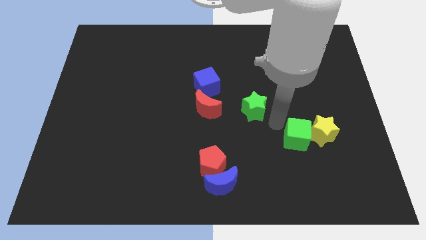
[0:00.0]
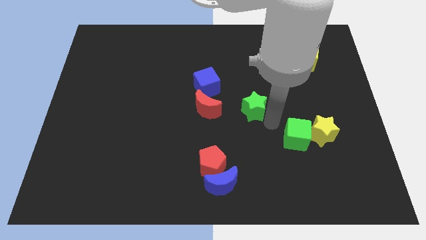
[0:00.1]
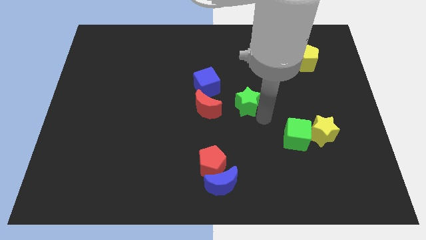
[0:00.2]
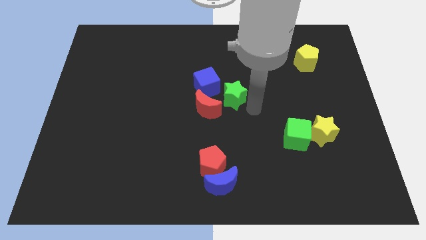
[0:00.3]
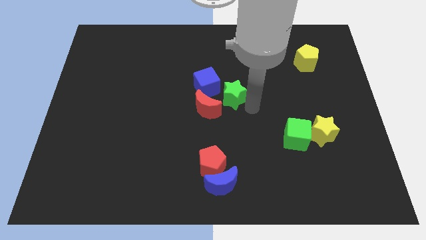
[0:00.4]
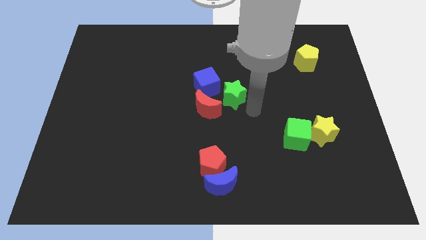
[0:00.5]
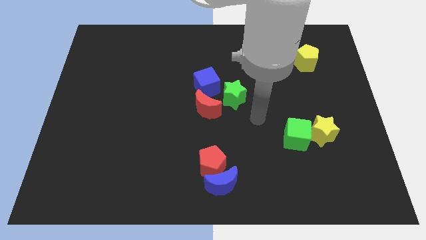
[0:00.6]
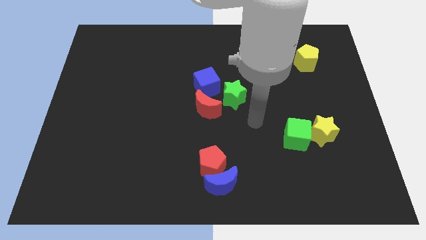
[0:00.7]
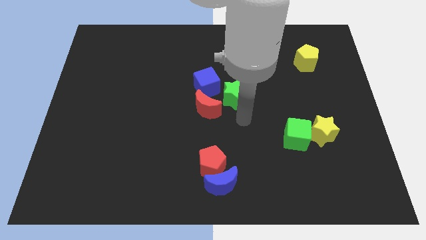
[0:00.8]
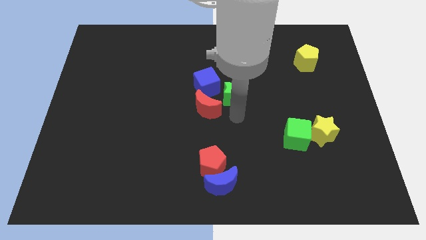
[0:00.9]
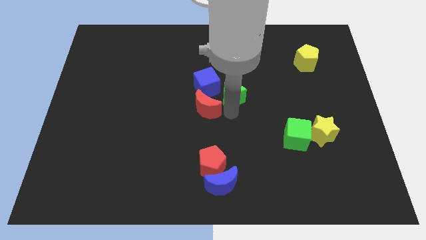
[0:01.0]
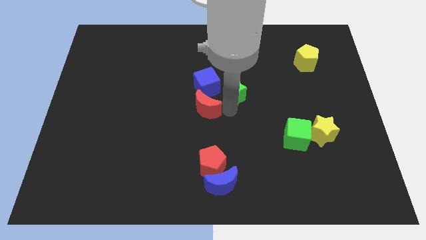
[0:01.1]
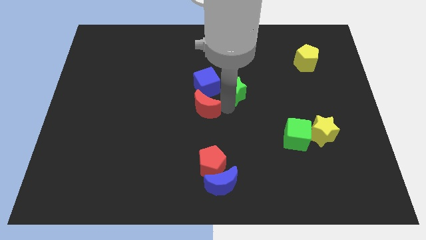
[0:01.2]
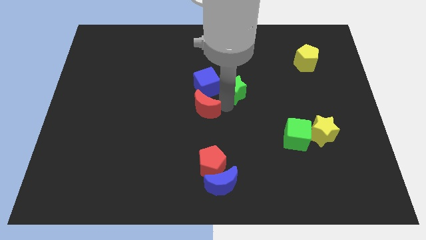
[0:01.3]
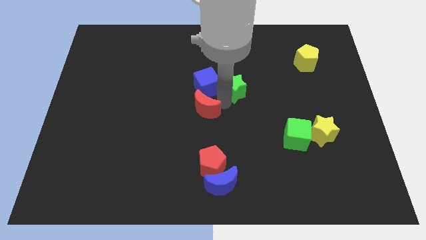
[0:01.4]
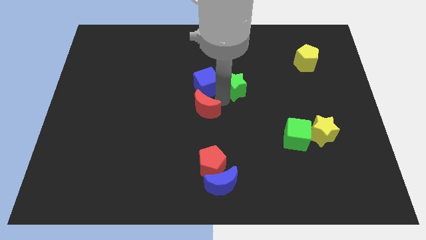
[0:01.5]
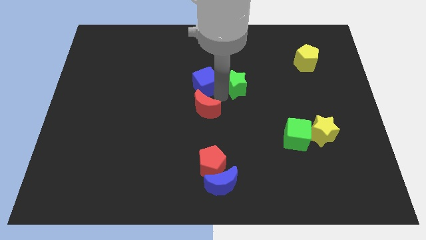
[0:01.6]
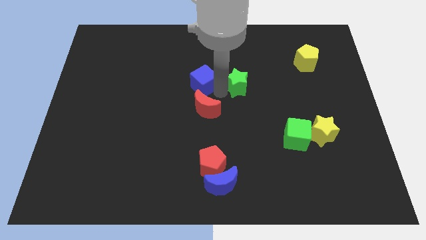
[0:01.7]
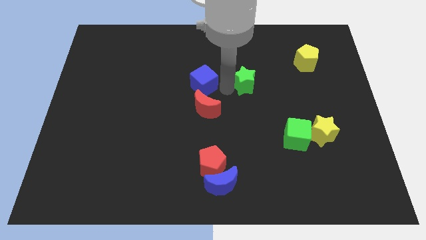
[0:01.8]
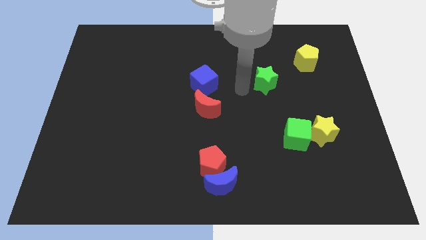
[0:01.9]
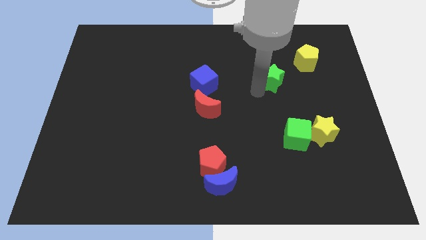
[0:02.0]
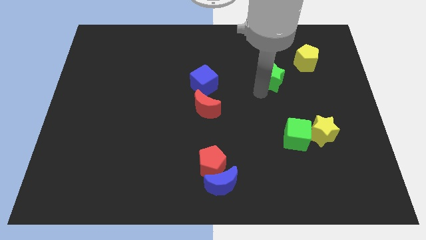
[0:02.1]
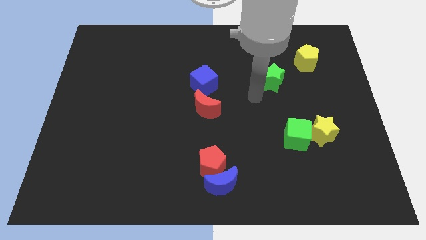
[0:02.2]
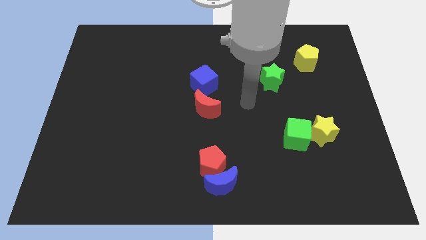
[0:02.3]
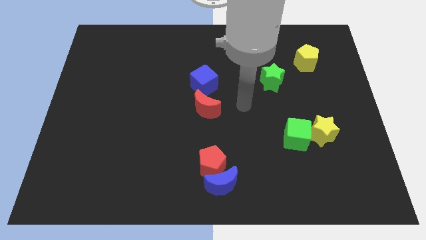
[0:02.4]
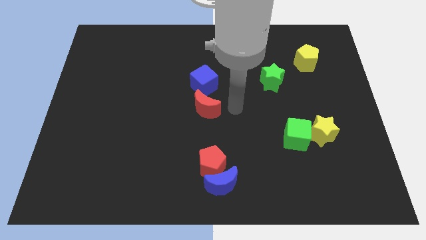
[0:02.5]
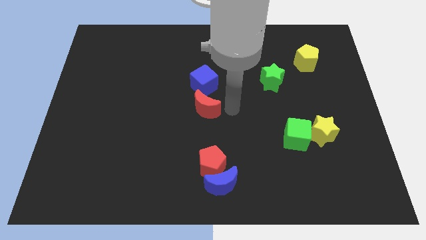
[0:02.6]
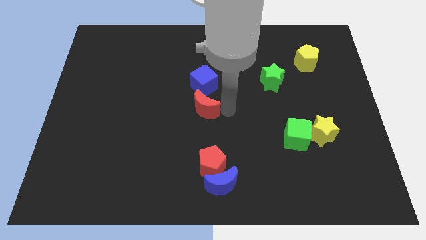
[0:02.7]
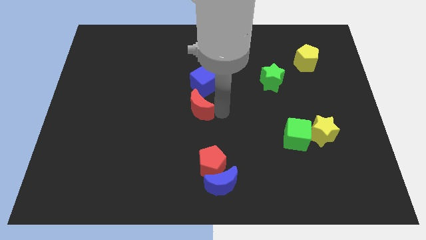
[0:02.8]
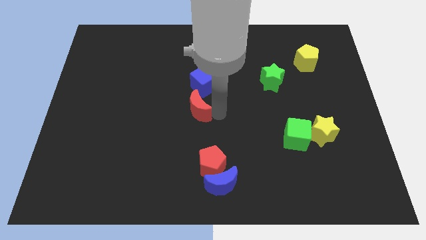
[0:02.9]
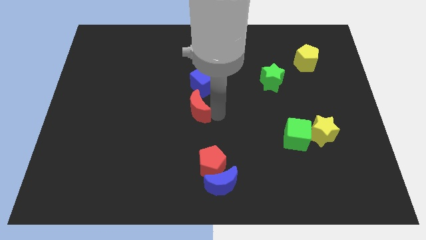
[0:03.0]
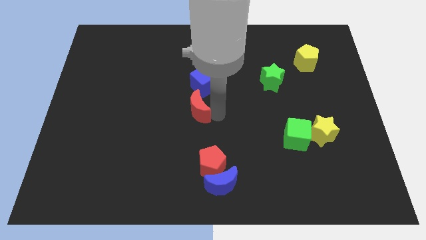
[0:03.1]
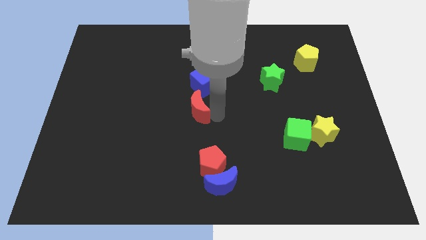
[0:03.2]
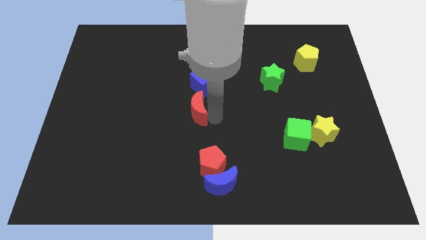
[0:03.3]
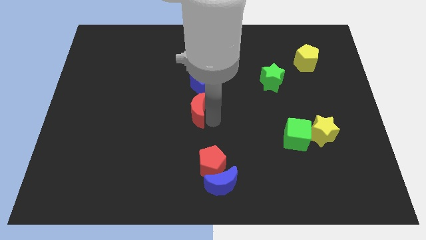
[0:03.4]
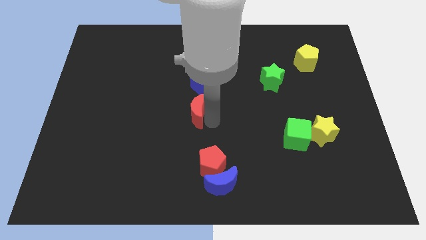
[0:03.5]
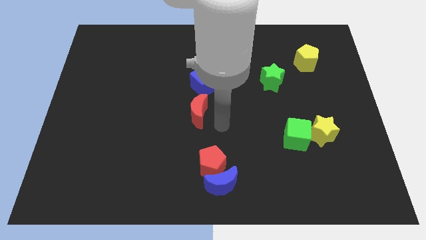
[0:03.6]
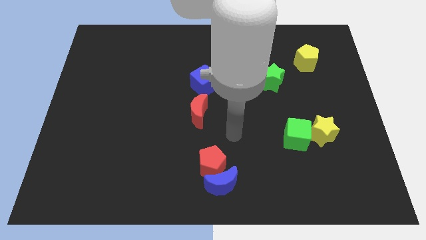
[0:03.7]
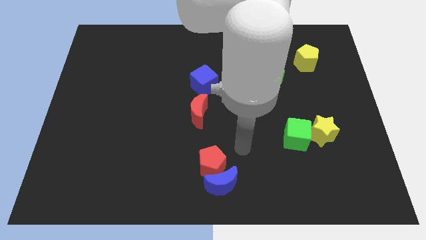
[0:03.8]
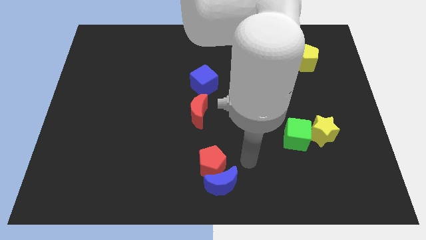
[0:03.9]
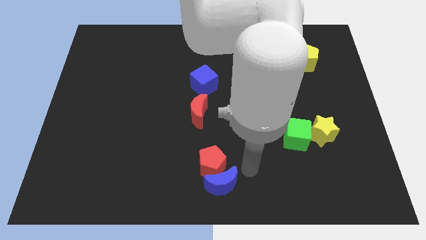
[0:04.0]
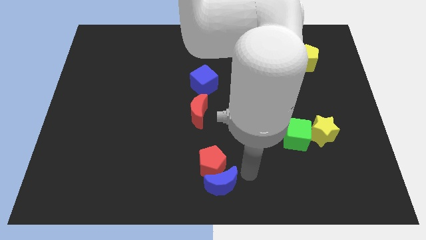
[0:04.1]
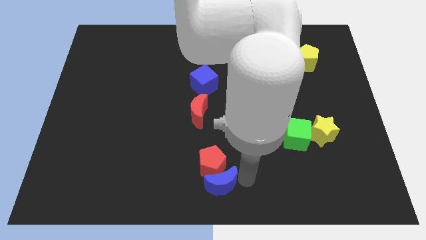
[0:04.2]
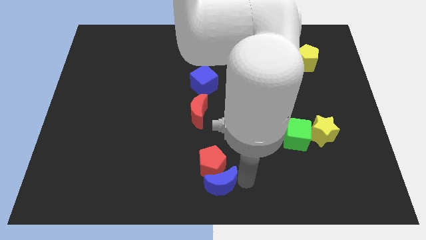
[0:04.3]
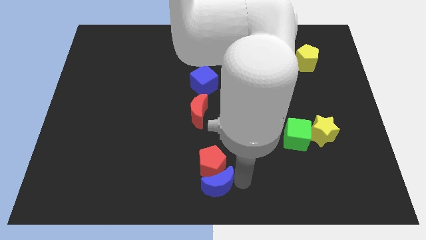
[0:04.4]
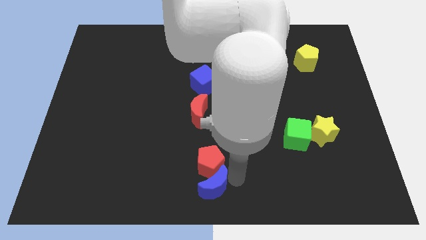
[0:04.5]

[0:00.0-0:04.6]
push the green star towards the yellow pentagon

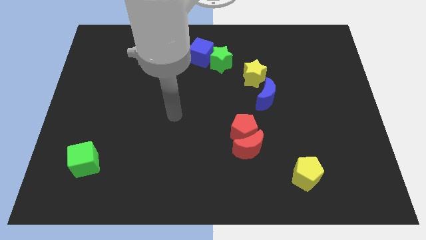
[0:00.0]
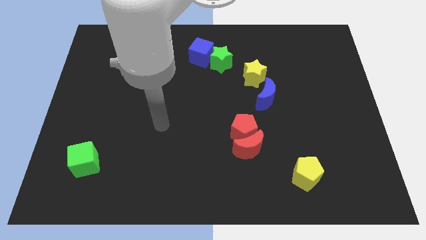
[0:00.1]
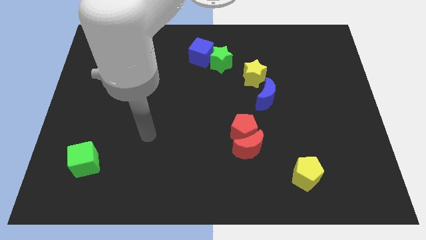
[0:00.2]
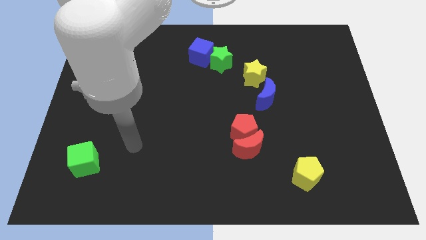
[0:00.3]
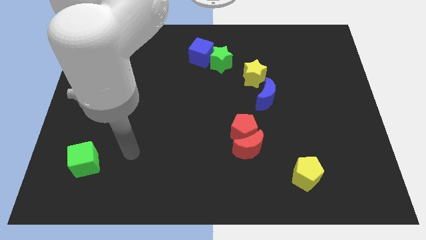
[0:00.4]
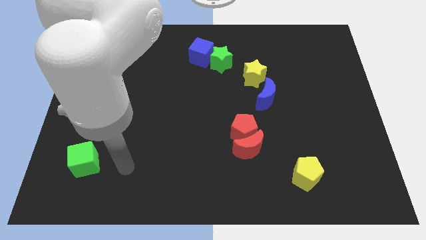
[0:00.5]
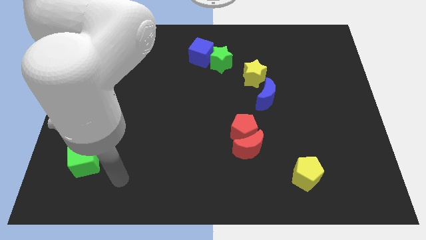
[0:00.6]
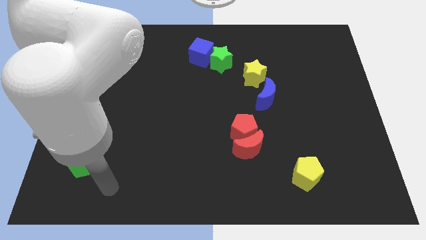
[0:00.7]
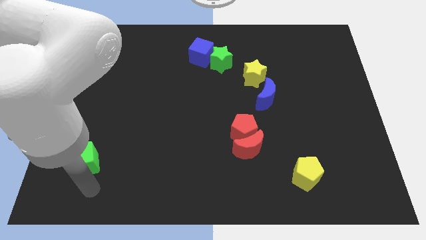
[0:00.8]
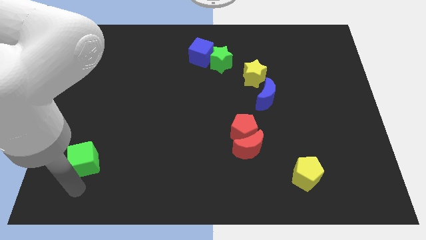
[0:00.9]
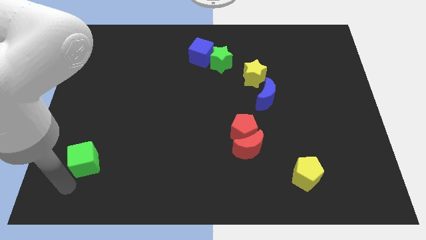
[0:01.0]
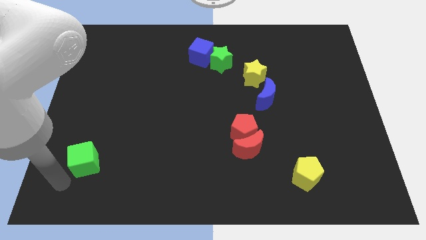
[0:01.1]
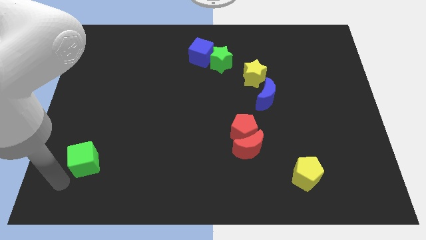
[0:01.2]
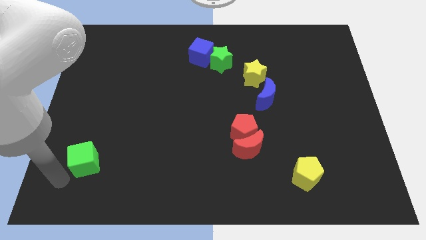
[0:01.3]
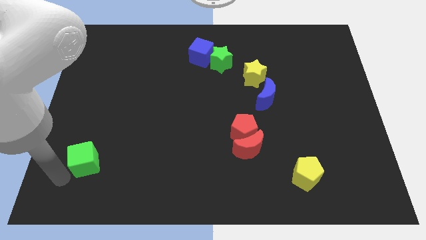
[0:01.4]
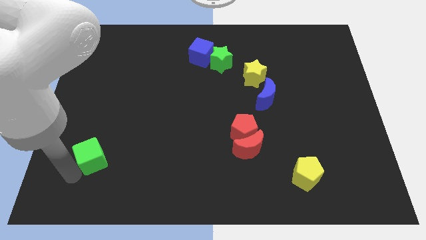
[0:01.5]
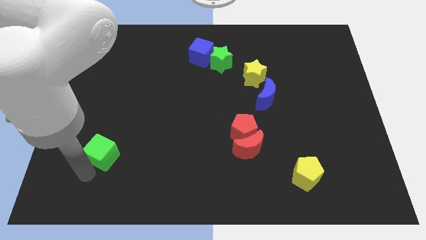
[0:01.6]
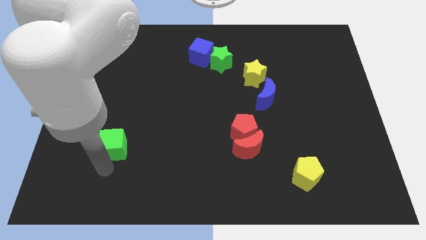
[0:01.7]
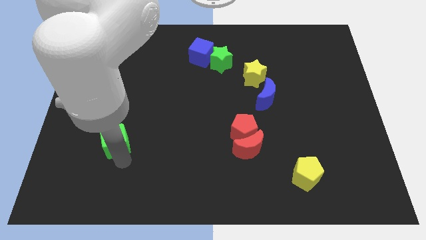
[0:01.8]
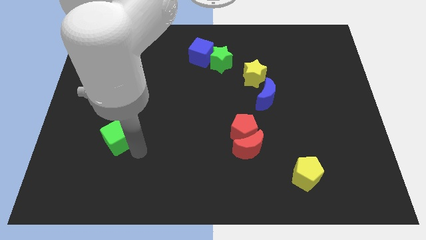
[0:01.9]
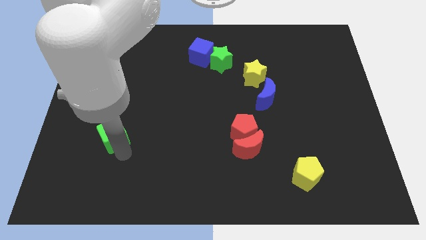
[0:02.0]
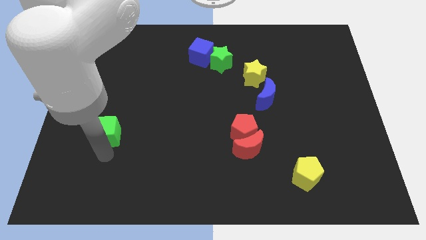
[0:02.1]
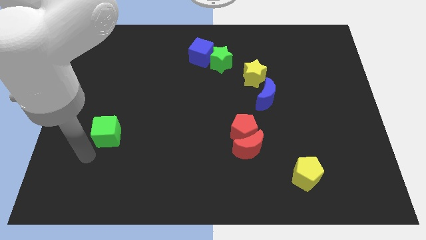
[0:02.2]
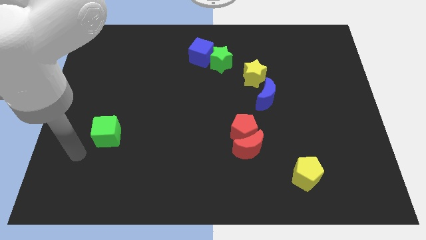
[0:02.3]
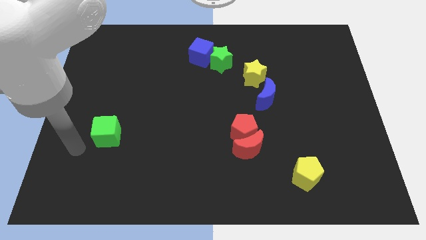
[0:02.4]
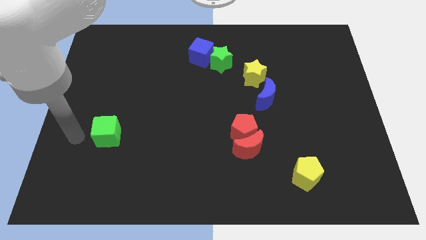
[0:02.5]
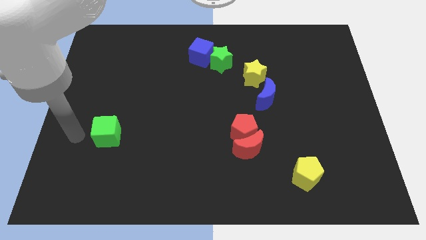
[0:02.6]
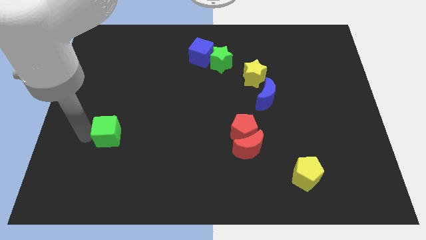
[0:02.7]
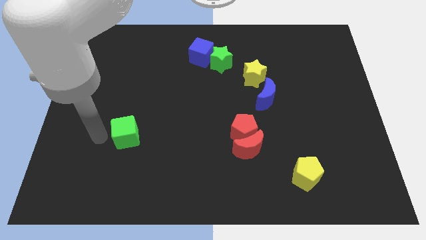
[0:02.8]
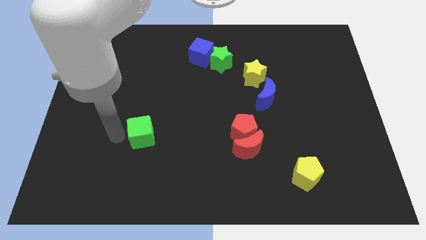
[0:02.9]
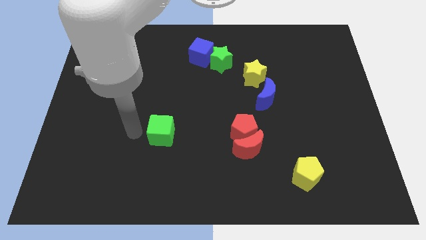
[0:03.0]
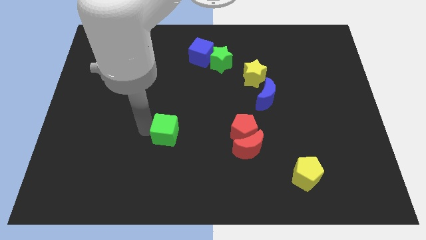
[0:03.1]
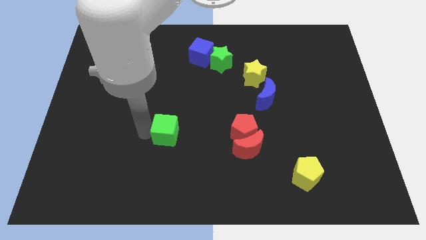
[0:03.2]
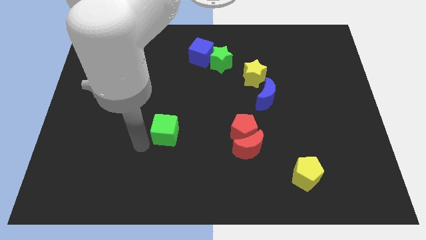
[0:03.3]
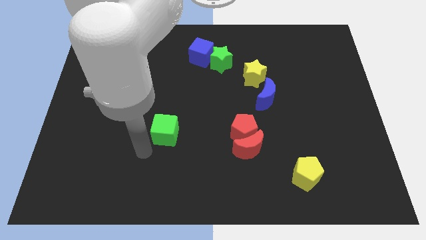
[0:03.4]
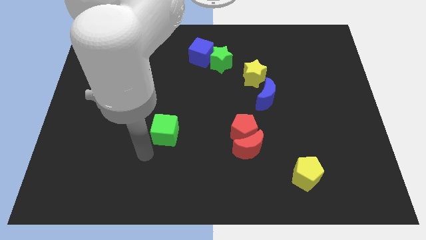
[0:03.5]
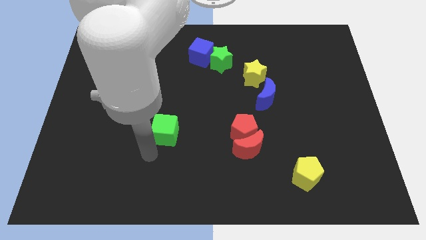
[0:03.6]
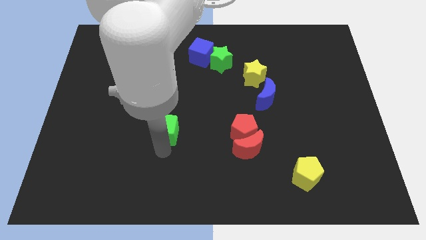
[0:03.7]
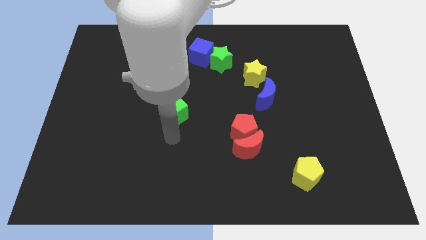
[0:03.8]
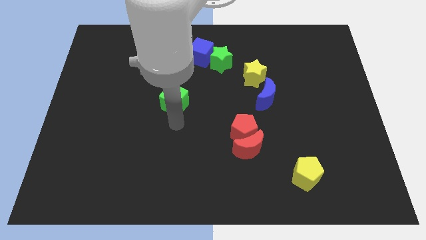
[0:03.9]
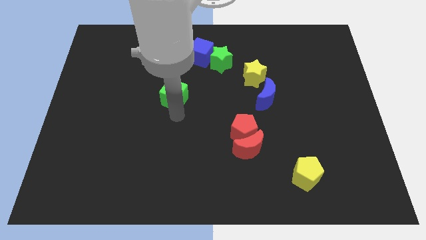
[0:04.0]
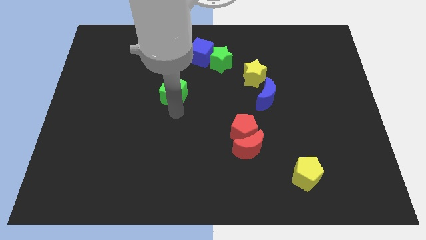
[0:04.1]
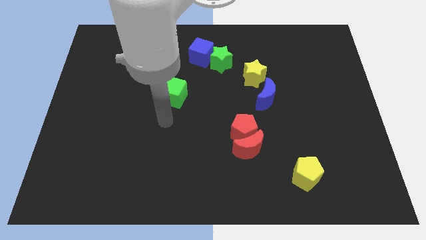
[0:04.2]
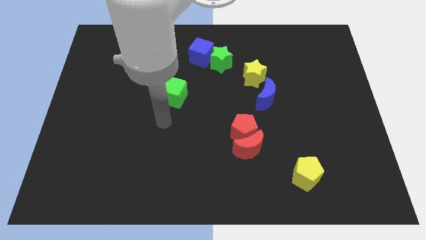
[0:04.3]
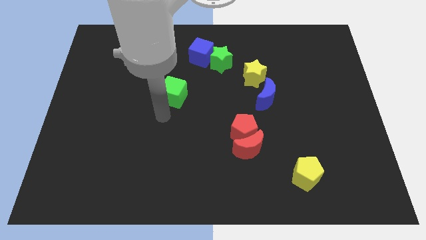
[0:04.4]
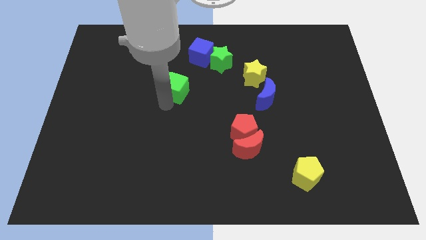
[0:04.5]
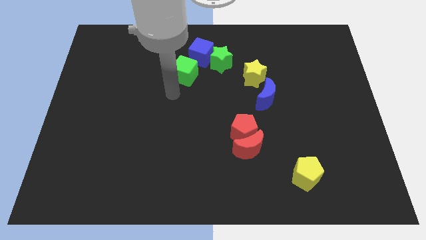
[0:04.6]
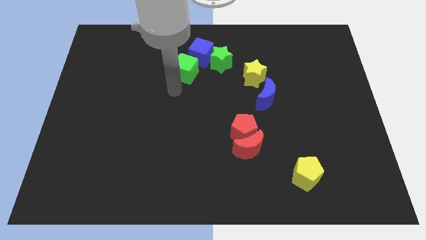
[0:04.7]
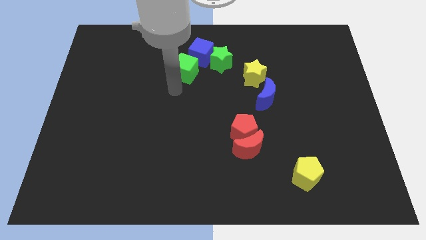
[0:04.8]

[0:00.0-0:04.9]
slide the green cube towards the blue cube
